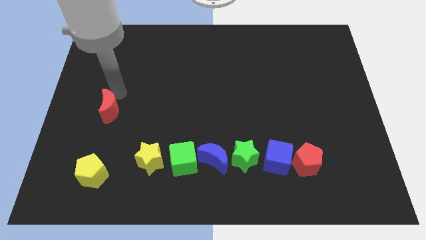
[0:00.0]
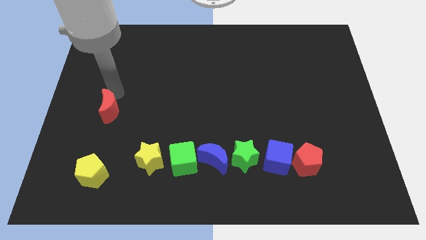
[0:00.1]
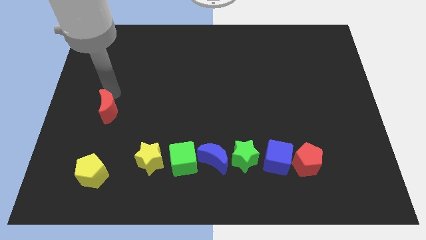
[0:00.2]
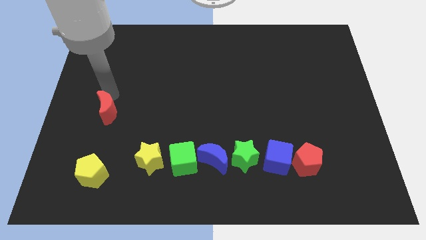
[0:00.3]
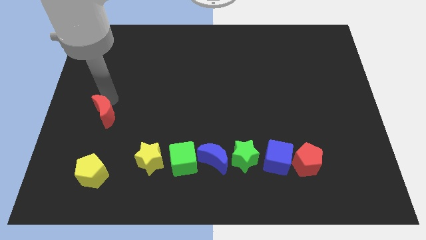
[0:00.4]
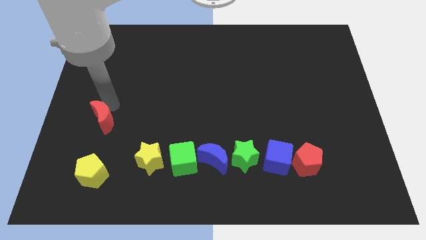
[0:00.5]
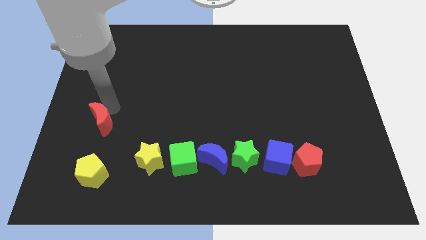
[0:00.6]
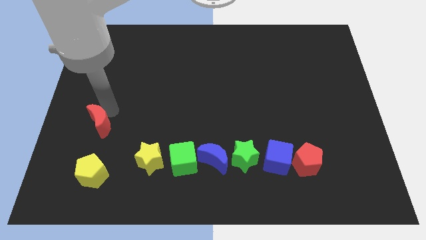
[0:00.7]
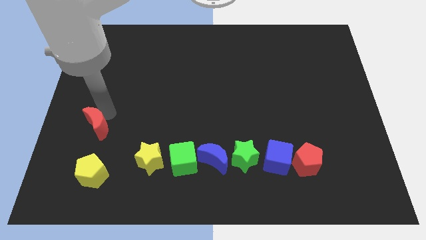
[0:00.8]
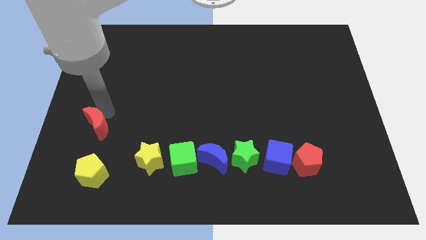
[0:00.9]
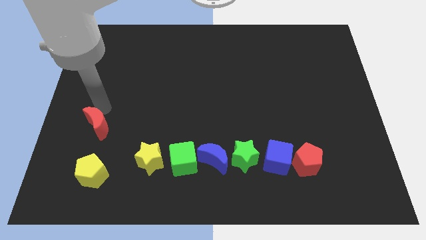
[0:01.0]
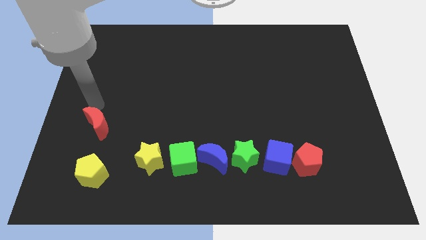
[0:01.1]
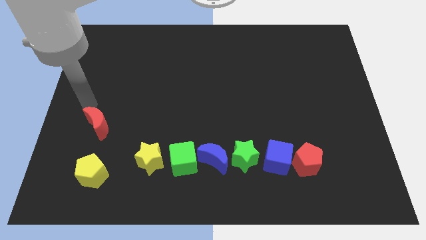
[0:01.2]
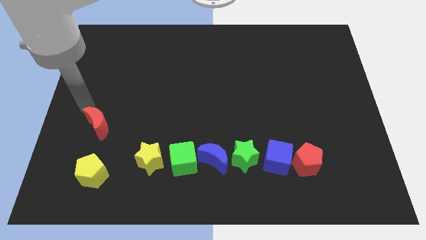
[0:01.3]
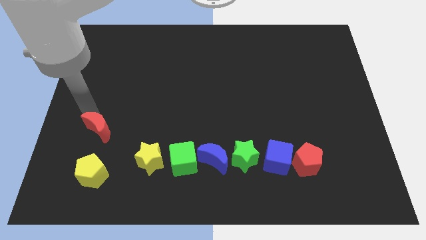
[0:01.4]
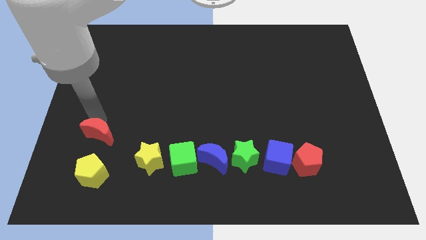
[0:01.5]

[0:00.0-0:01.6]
push the red crescent towards down

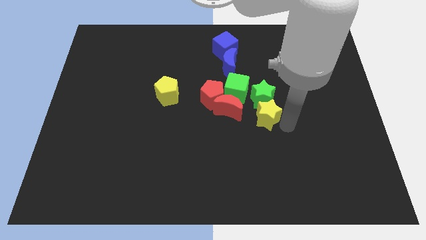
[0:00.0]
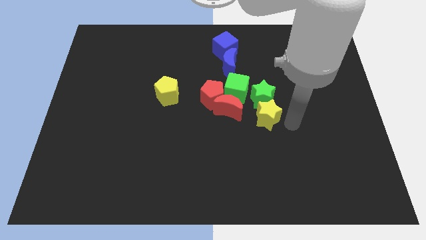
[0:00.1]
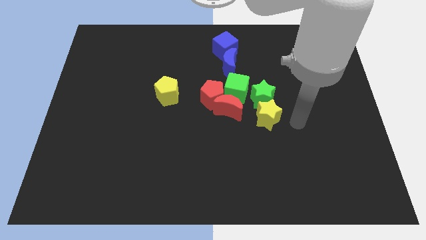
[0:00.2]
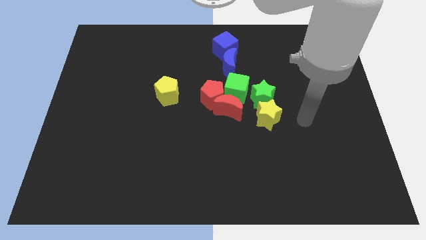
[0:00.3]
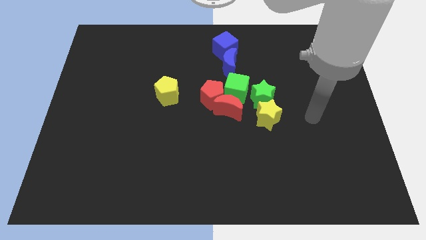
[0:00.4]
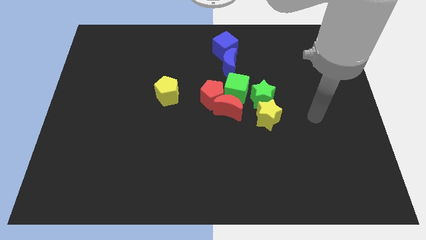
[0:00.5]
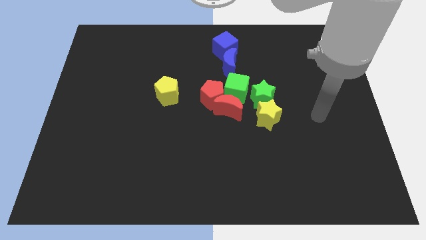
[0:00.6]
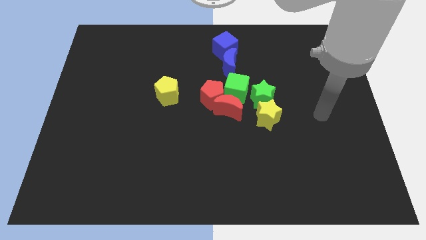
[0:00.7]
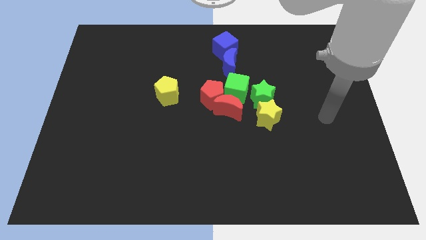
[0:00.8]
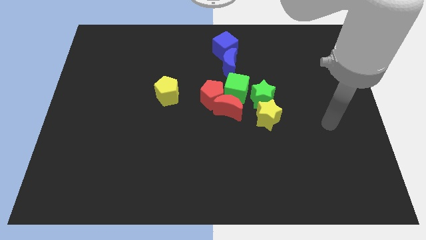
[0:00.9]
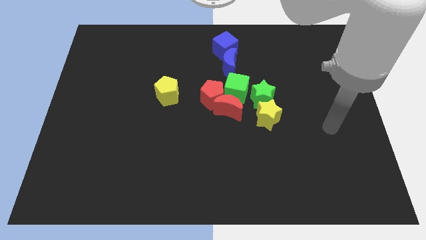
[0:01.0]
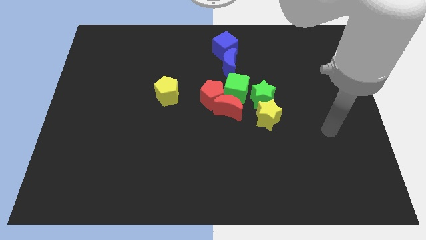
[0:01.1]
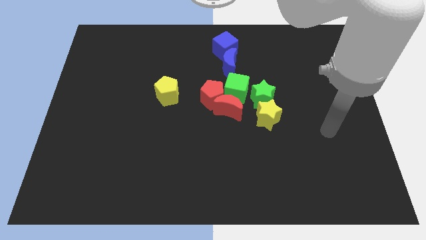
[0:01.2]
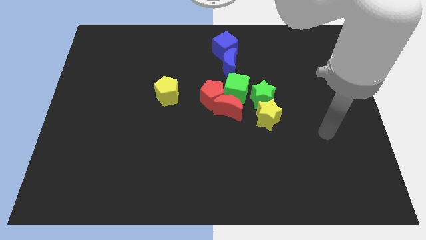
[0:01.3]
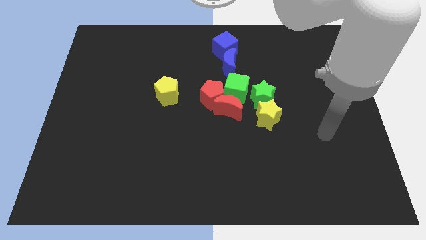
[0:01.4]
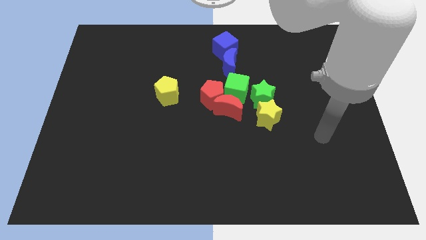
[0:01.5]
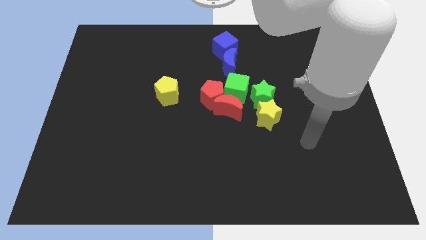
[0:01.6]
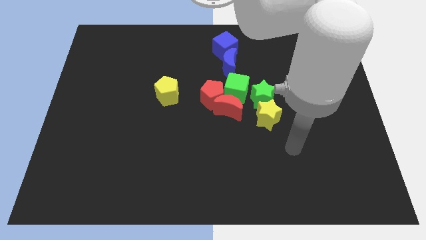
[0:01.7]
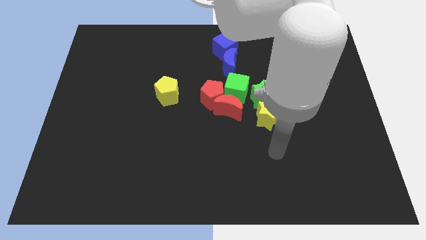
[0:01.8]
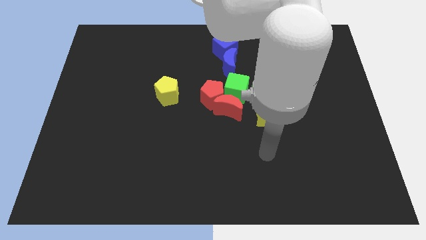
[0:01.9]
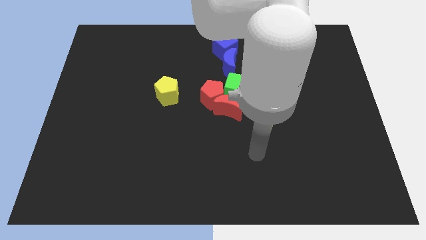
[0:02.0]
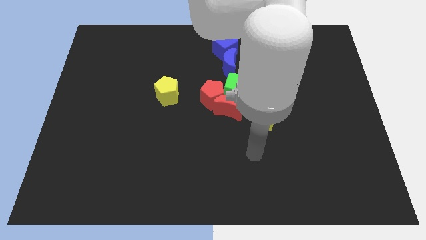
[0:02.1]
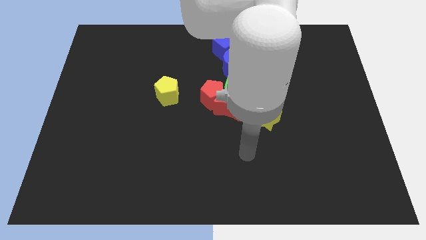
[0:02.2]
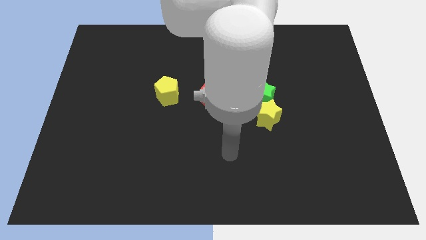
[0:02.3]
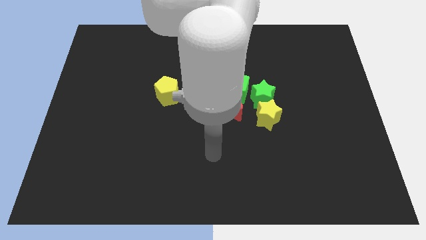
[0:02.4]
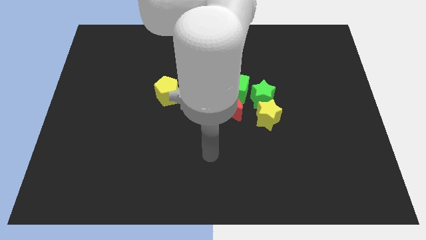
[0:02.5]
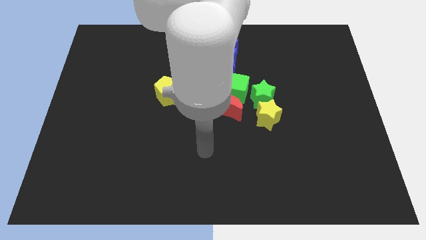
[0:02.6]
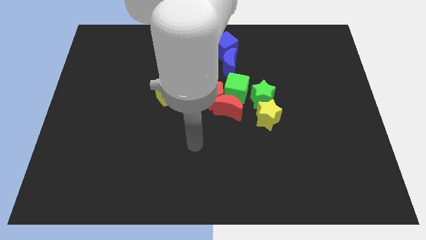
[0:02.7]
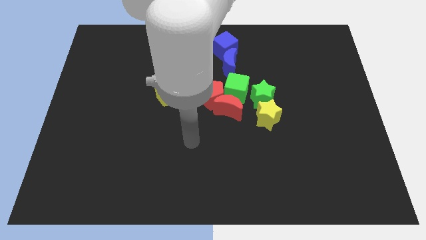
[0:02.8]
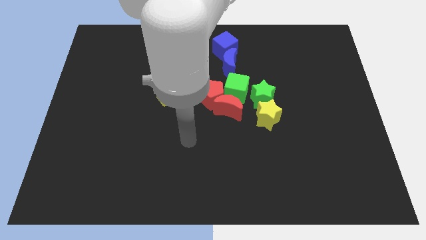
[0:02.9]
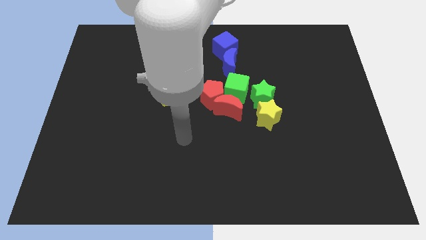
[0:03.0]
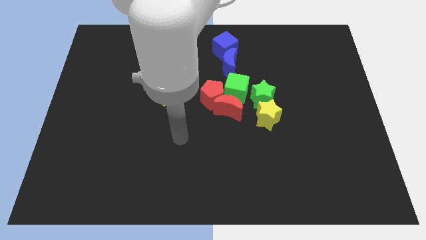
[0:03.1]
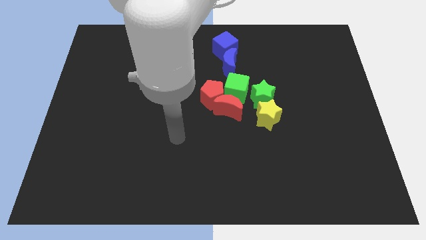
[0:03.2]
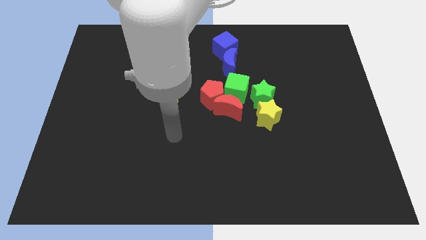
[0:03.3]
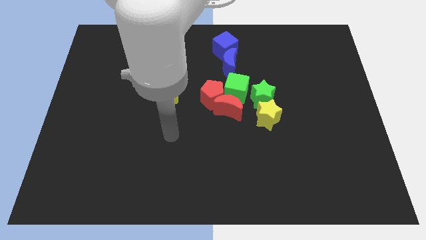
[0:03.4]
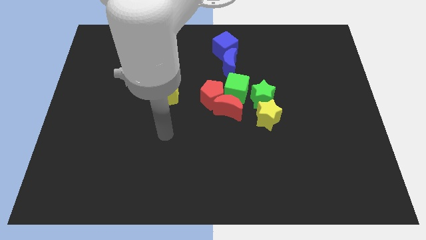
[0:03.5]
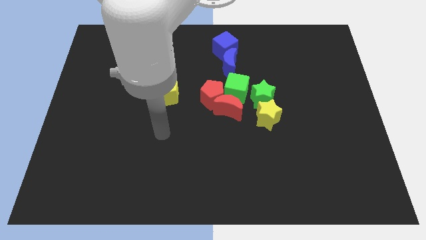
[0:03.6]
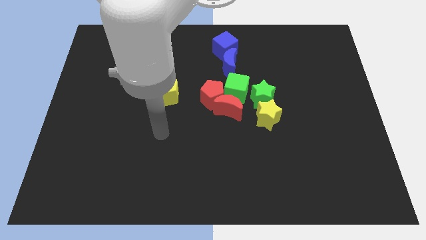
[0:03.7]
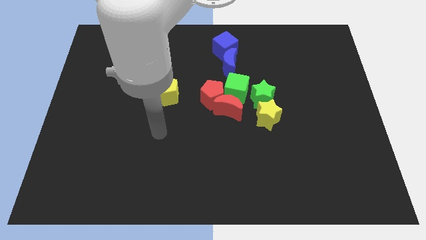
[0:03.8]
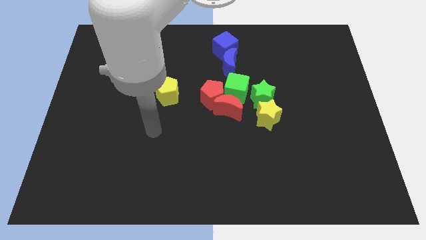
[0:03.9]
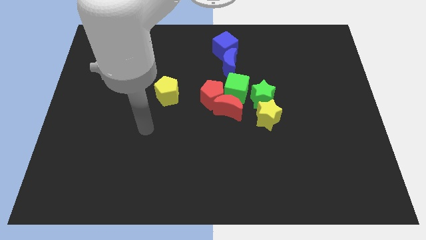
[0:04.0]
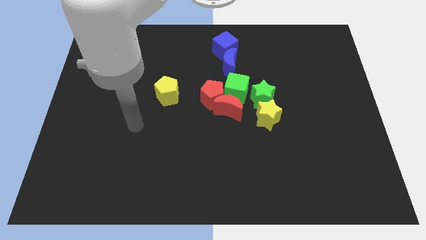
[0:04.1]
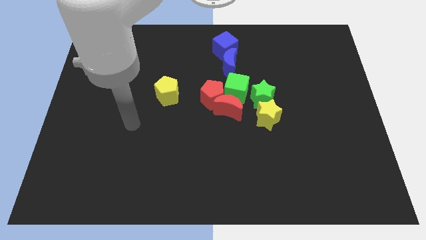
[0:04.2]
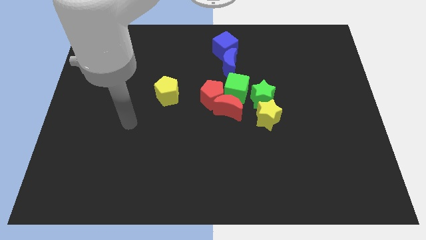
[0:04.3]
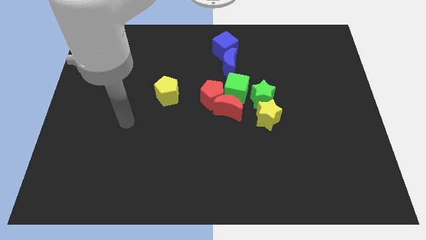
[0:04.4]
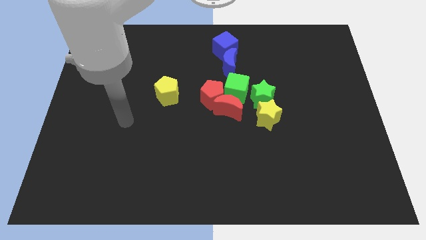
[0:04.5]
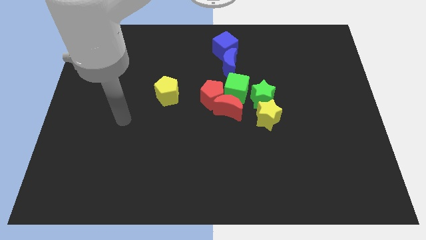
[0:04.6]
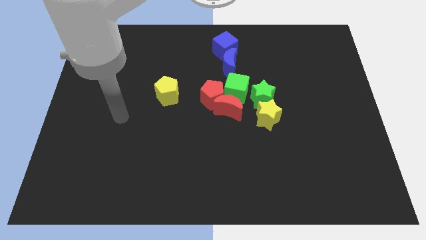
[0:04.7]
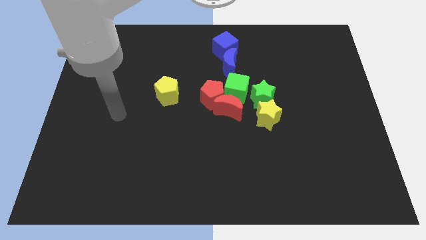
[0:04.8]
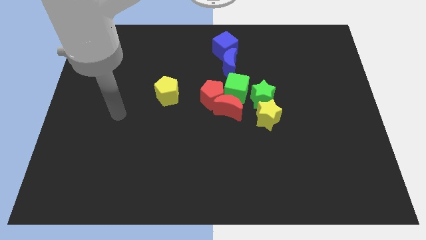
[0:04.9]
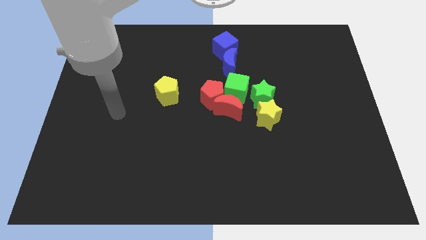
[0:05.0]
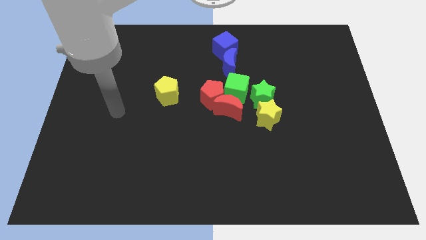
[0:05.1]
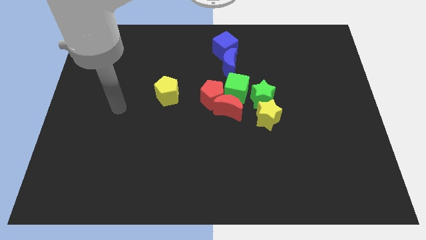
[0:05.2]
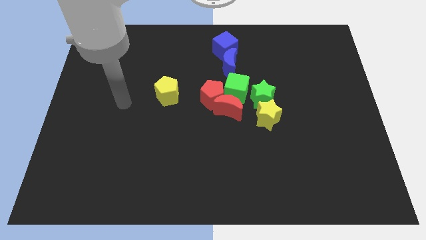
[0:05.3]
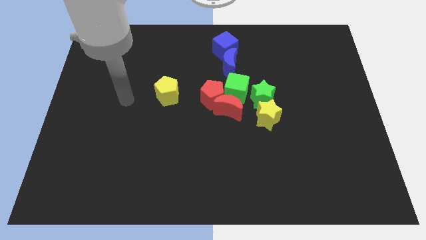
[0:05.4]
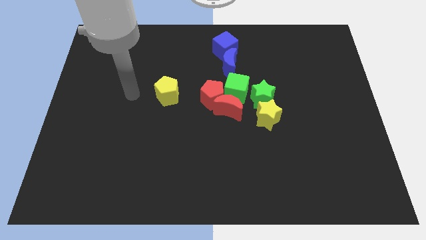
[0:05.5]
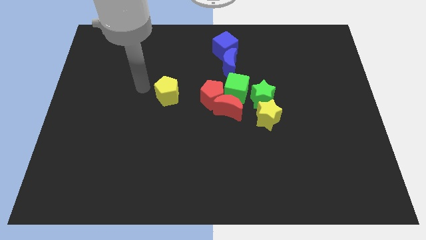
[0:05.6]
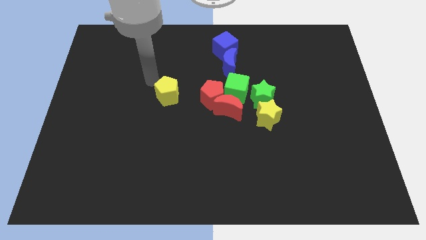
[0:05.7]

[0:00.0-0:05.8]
go to the left side of the yellow pentagon

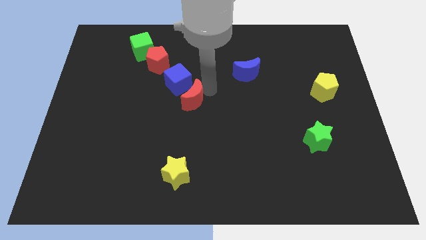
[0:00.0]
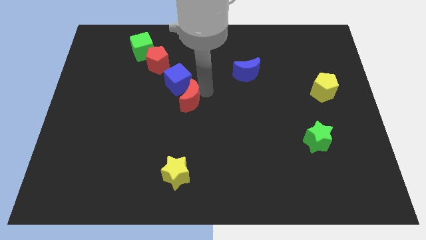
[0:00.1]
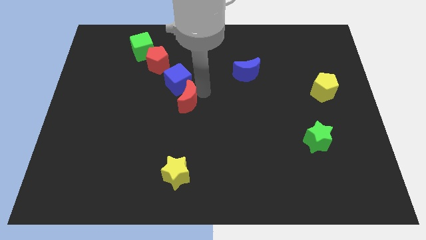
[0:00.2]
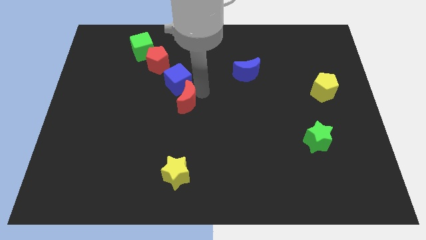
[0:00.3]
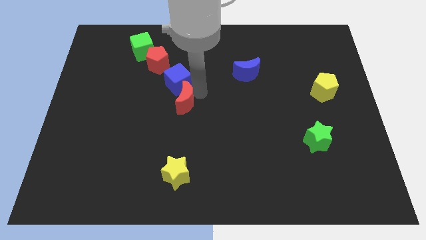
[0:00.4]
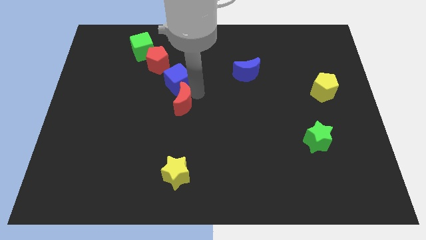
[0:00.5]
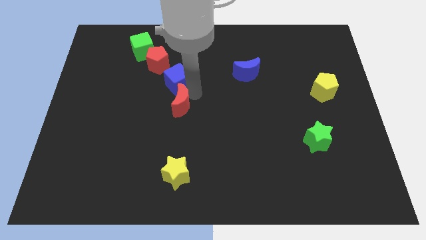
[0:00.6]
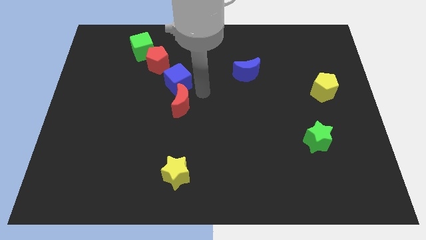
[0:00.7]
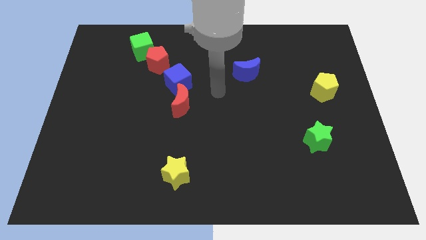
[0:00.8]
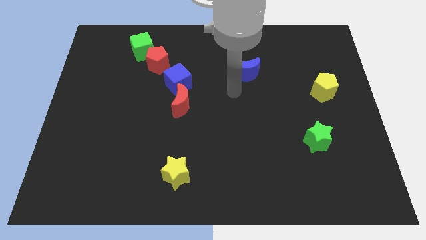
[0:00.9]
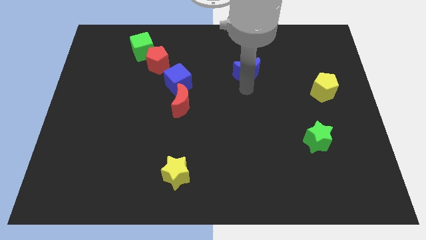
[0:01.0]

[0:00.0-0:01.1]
slightly move the red crescent towards the left center of the board

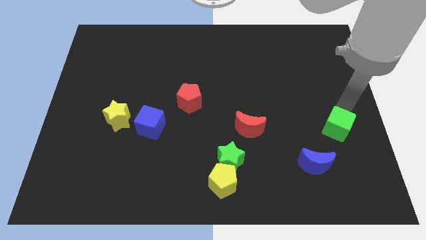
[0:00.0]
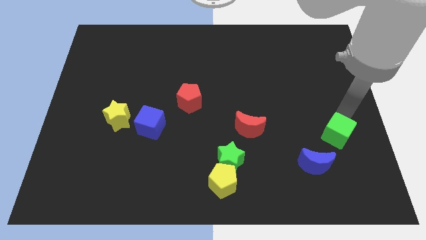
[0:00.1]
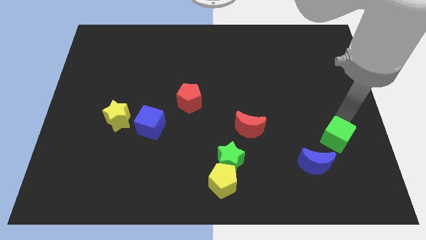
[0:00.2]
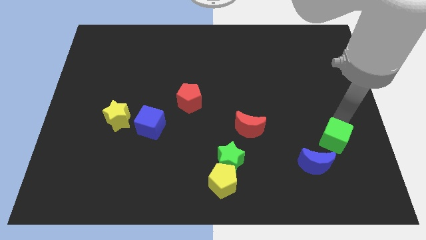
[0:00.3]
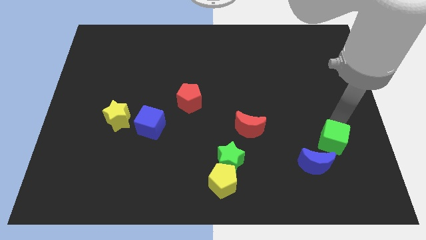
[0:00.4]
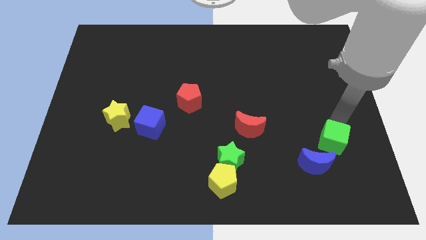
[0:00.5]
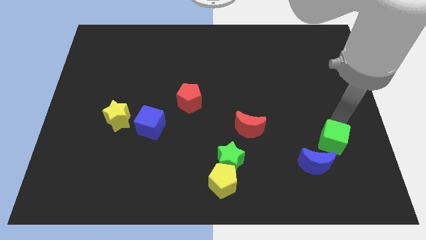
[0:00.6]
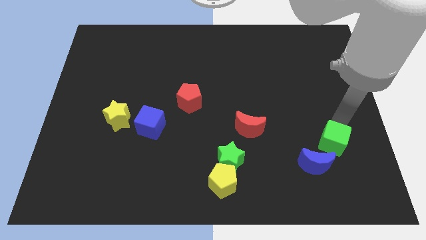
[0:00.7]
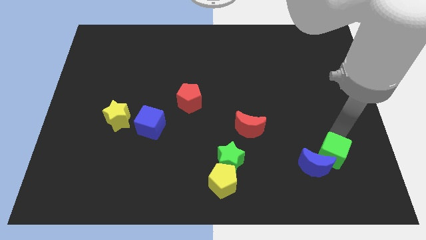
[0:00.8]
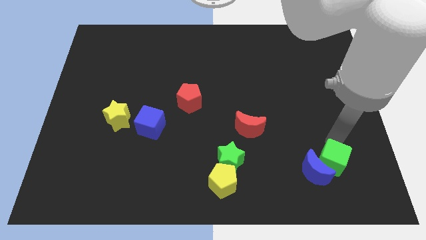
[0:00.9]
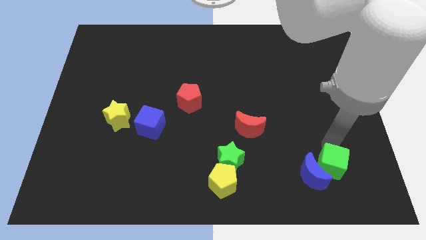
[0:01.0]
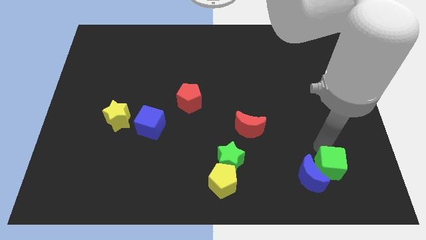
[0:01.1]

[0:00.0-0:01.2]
move green cube into blue moon
